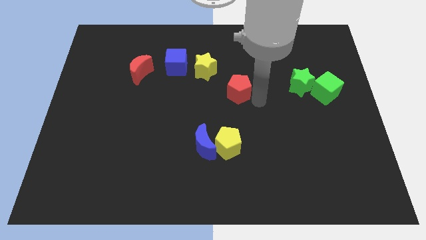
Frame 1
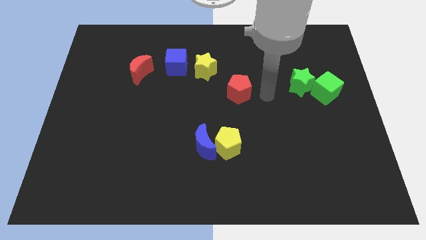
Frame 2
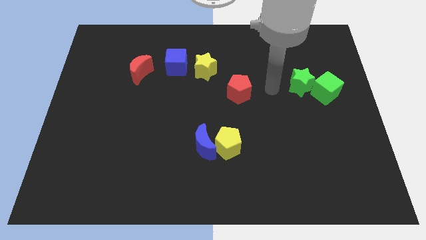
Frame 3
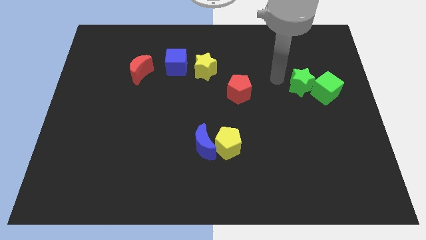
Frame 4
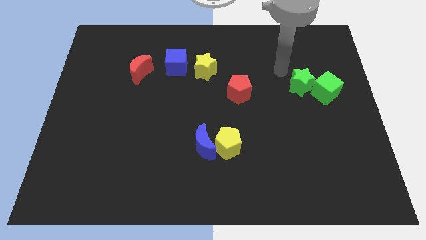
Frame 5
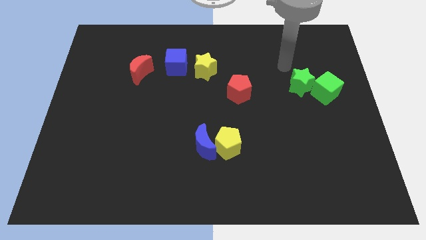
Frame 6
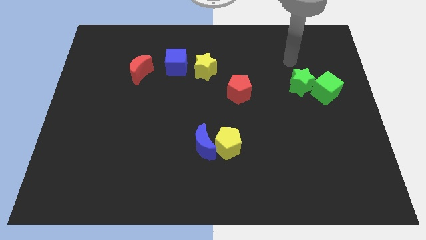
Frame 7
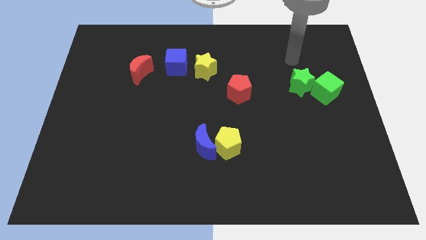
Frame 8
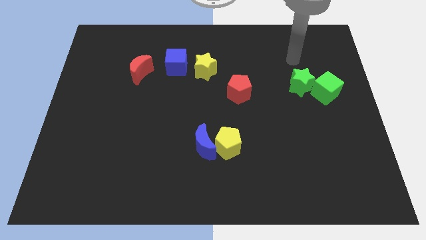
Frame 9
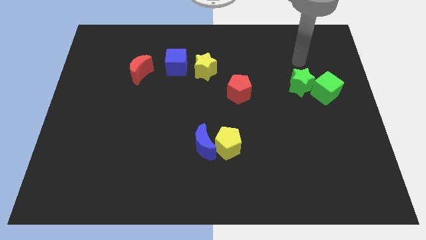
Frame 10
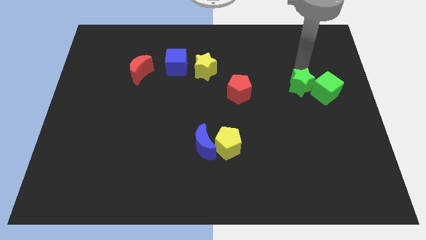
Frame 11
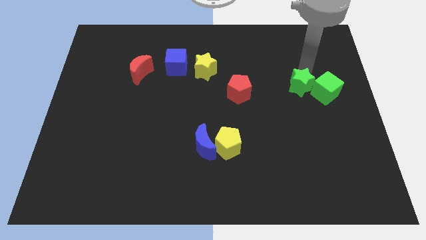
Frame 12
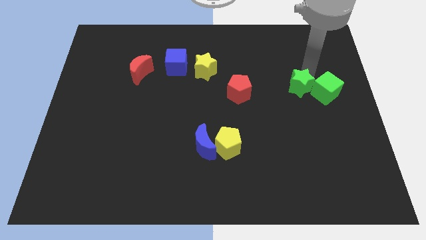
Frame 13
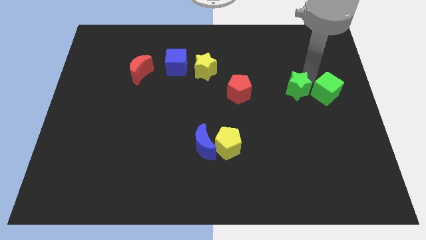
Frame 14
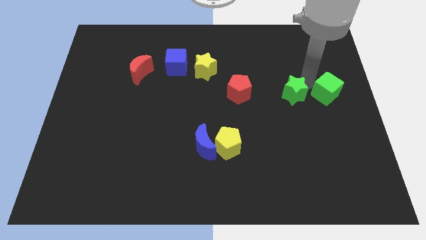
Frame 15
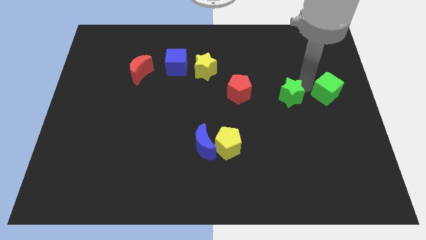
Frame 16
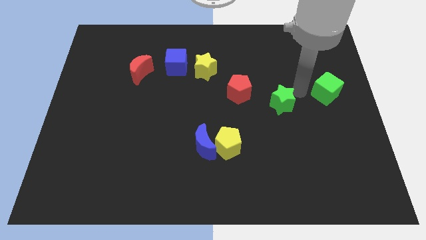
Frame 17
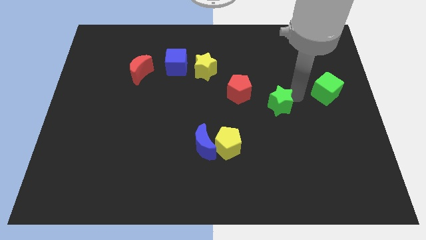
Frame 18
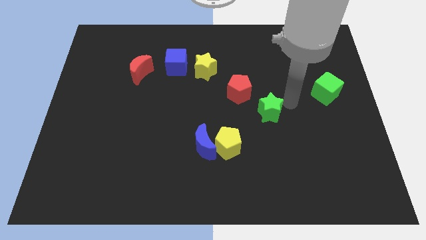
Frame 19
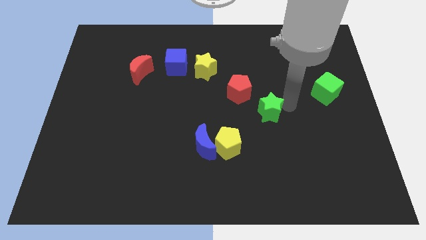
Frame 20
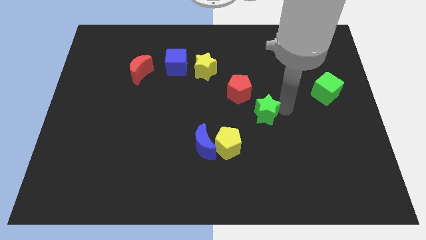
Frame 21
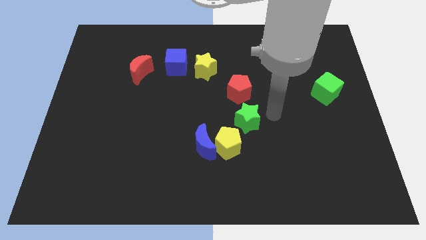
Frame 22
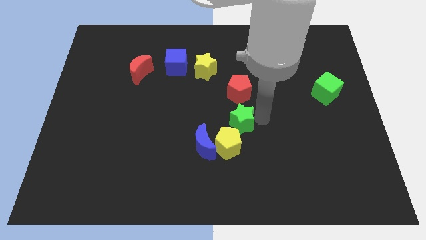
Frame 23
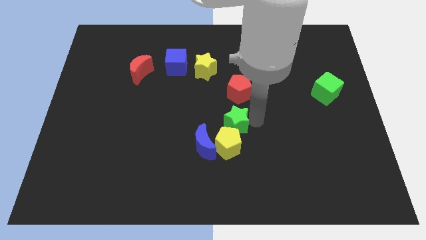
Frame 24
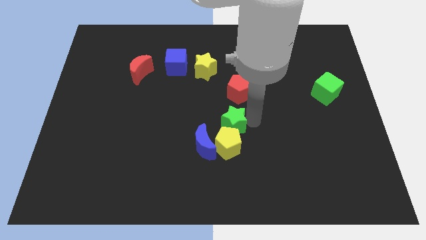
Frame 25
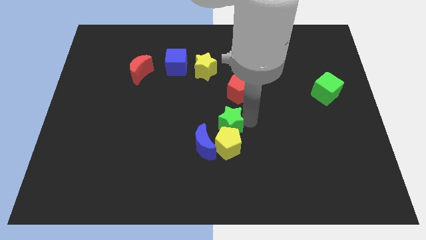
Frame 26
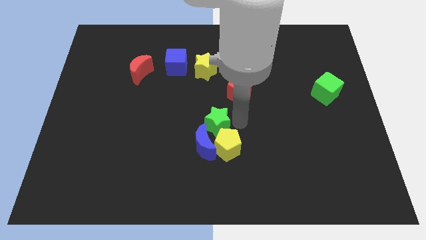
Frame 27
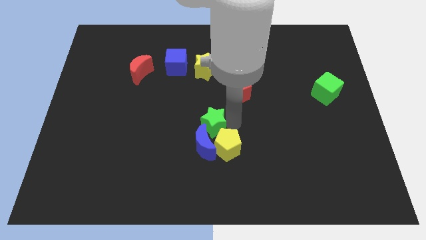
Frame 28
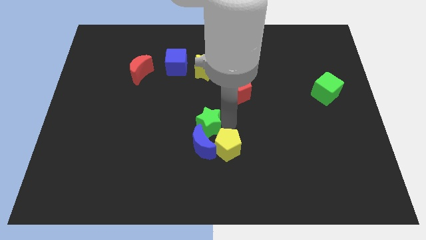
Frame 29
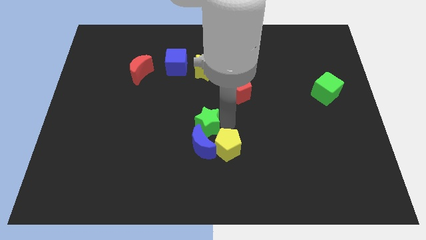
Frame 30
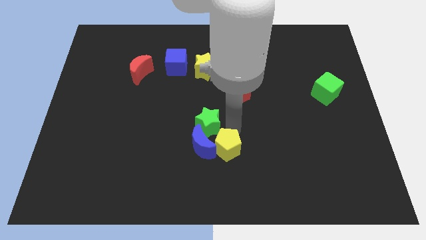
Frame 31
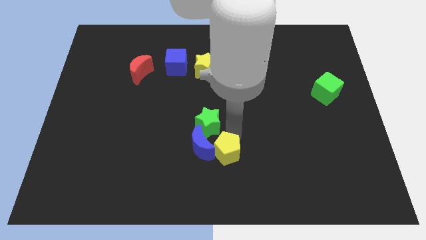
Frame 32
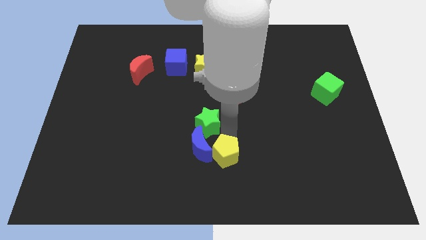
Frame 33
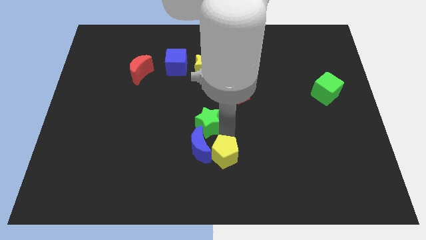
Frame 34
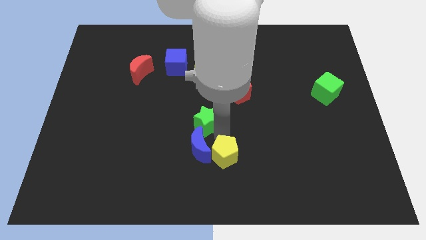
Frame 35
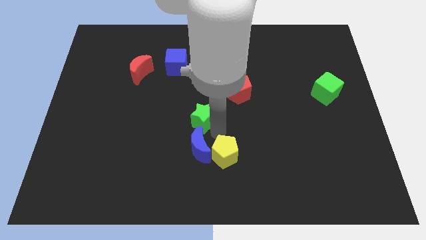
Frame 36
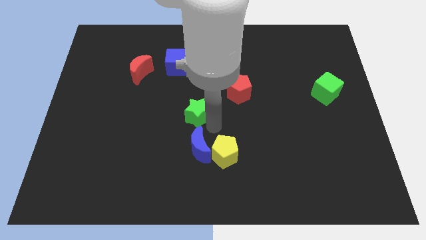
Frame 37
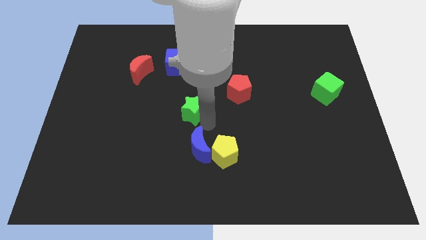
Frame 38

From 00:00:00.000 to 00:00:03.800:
place the green star vertical to the yellow star

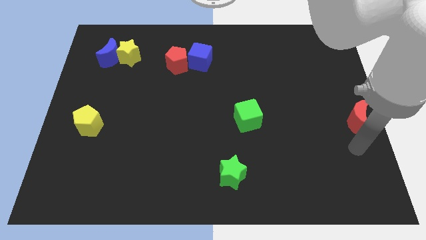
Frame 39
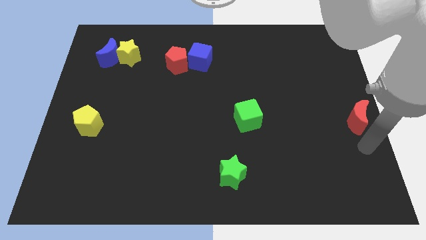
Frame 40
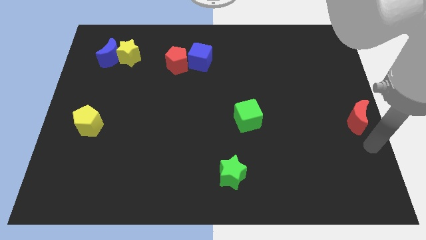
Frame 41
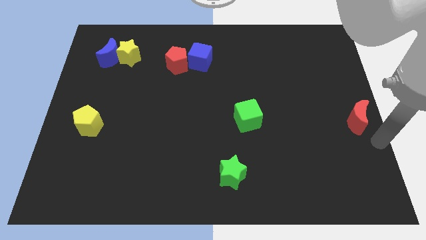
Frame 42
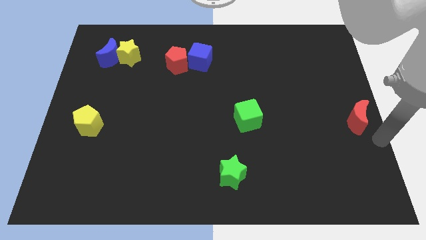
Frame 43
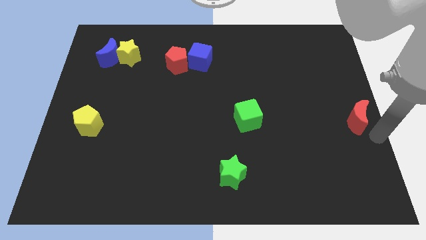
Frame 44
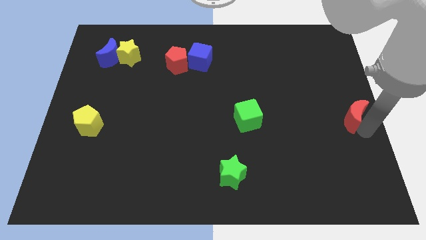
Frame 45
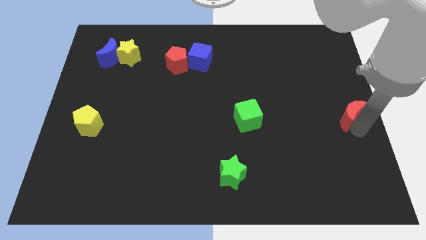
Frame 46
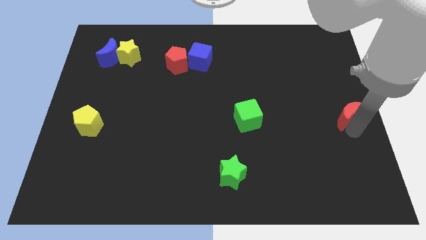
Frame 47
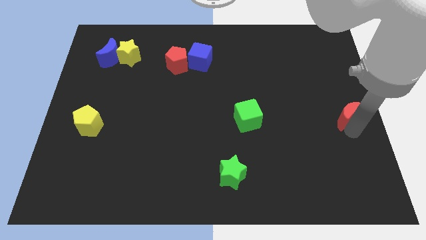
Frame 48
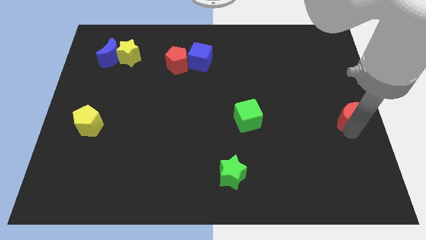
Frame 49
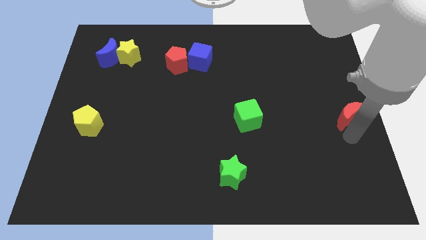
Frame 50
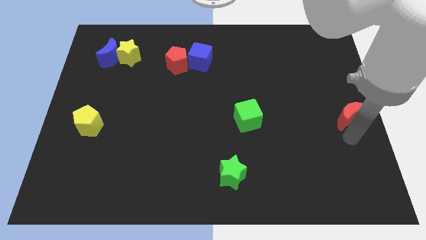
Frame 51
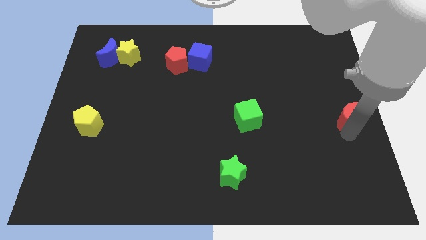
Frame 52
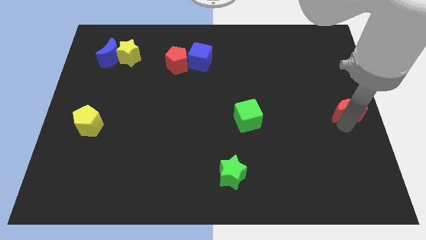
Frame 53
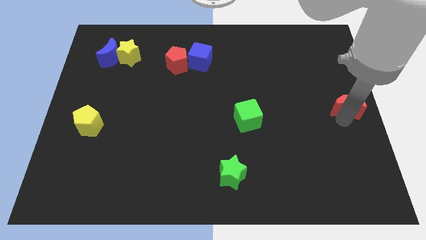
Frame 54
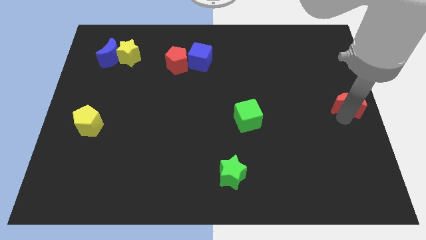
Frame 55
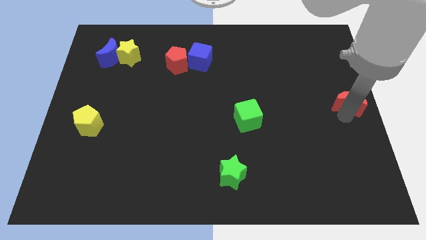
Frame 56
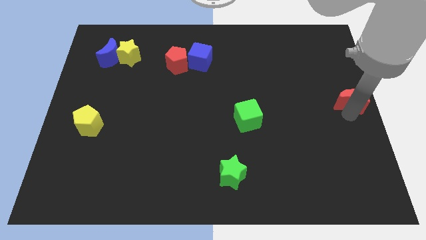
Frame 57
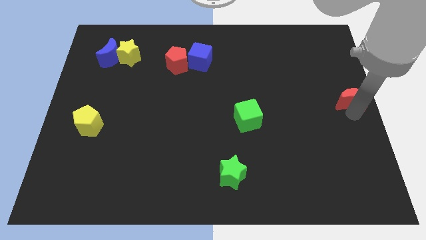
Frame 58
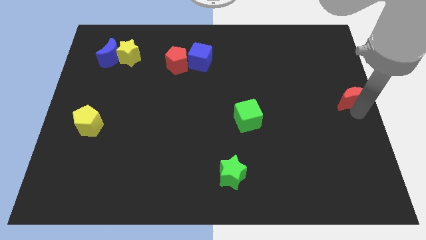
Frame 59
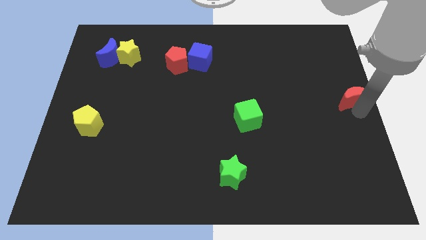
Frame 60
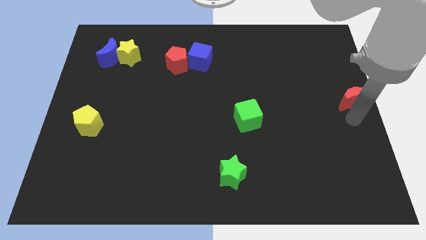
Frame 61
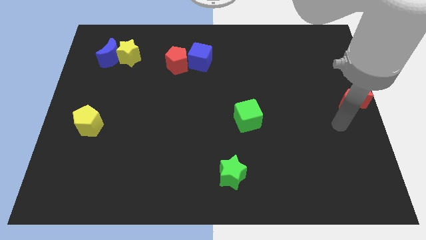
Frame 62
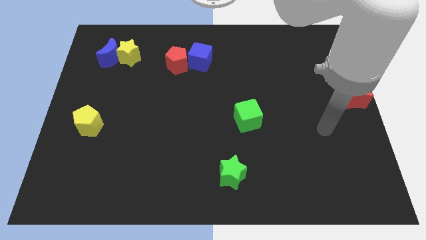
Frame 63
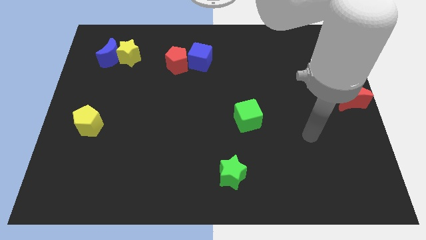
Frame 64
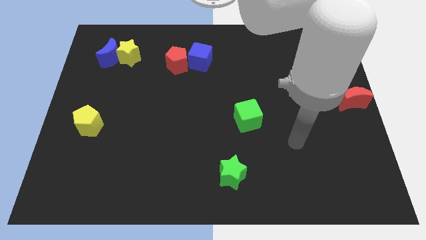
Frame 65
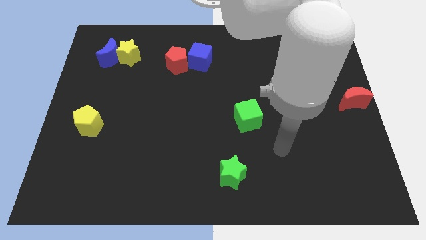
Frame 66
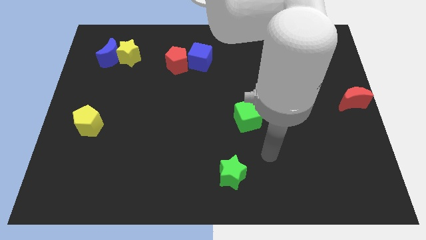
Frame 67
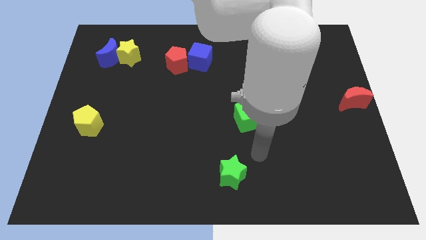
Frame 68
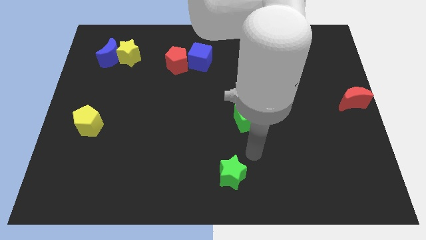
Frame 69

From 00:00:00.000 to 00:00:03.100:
move the arm in between the green star and green cube

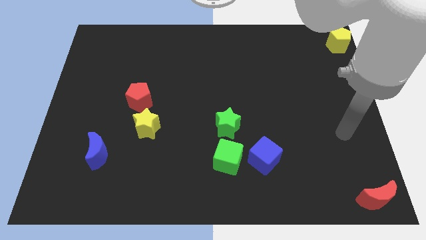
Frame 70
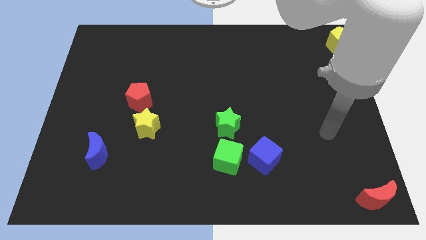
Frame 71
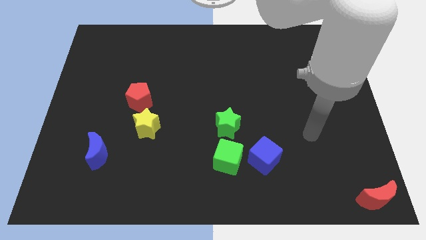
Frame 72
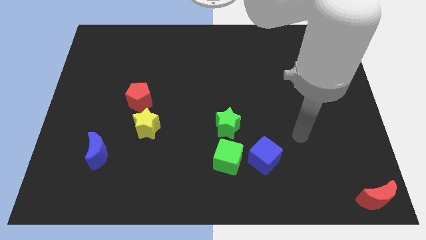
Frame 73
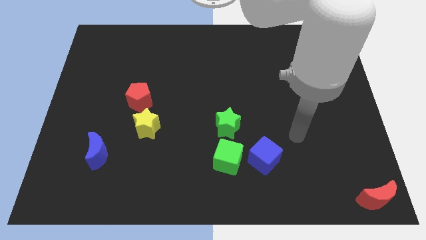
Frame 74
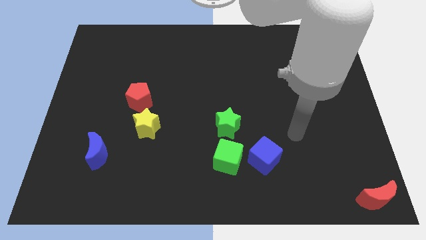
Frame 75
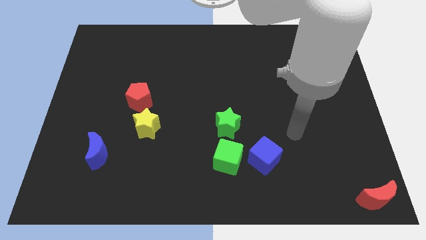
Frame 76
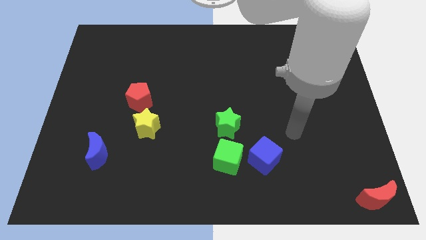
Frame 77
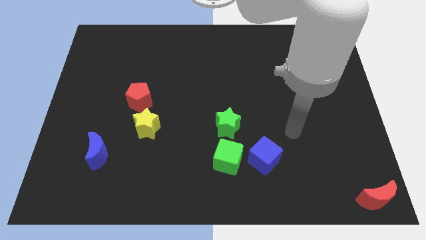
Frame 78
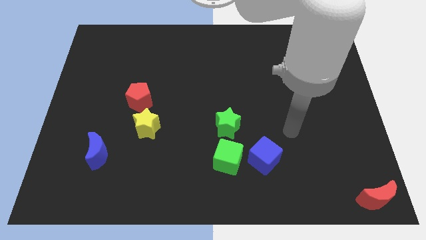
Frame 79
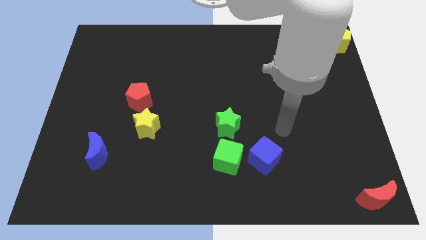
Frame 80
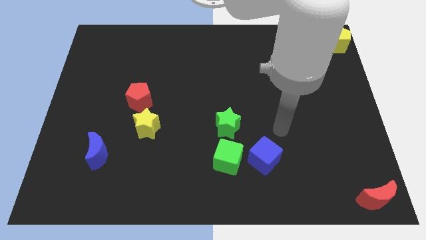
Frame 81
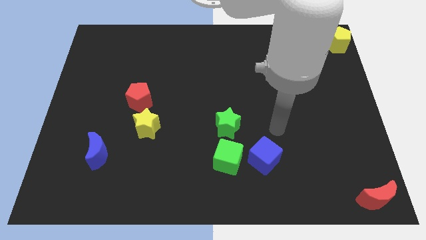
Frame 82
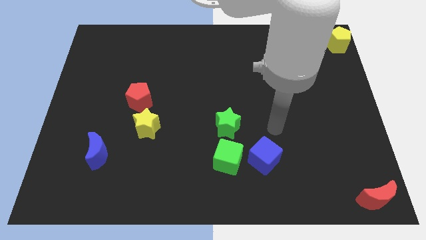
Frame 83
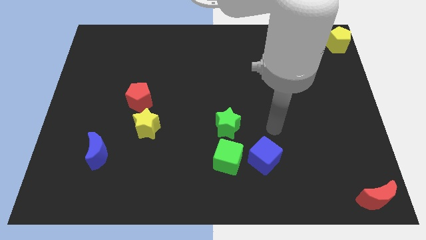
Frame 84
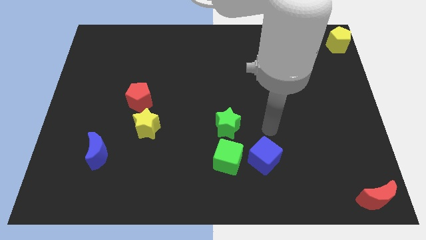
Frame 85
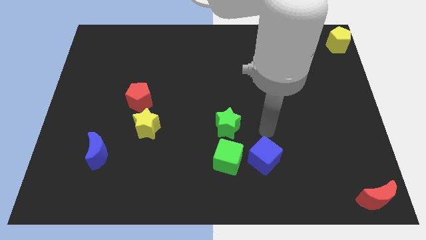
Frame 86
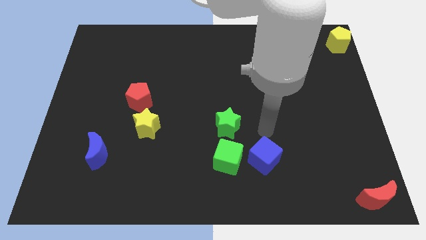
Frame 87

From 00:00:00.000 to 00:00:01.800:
place arm on the top of blue cube

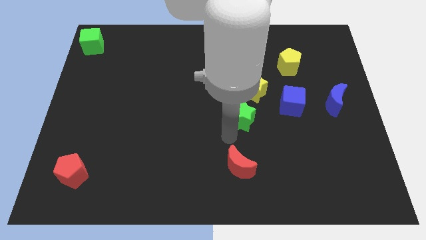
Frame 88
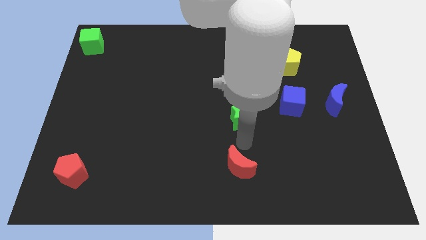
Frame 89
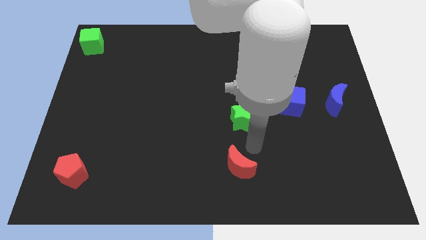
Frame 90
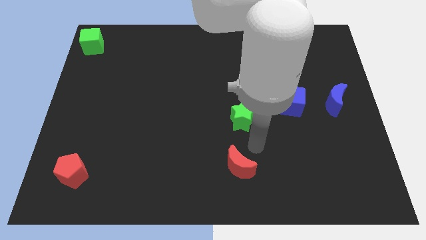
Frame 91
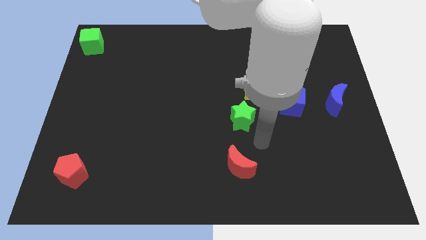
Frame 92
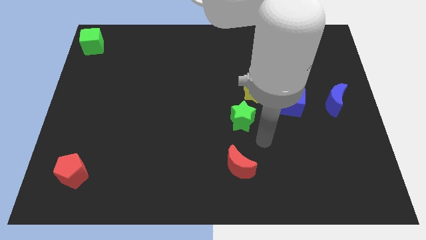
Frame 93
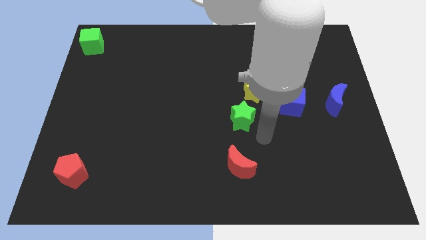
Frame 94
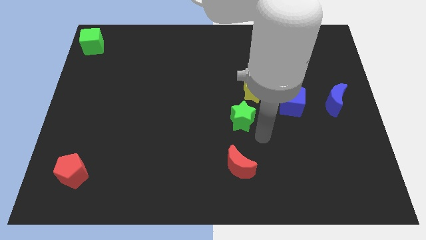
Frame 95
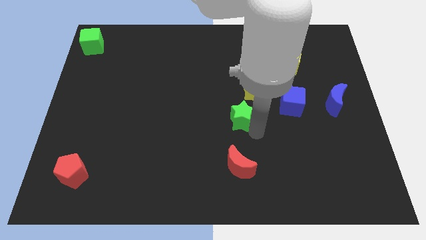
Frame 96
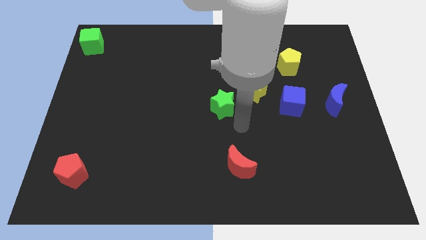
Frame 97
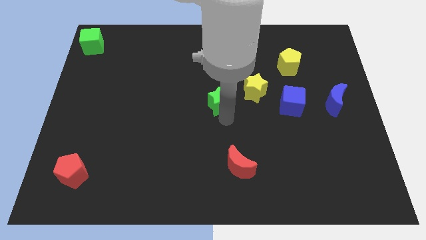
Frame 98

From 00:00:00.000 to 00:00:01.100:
push green star towards center
